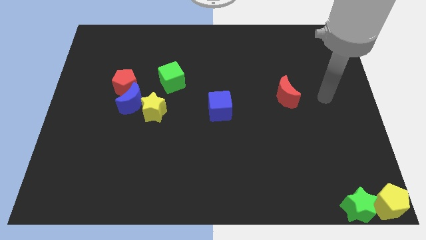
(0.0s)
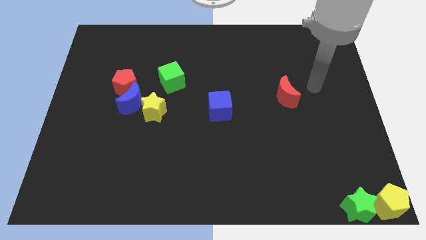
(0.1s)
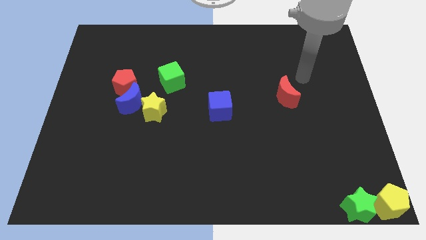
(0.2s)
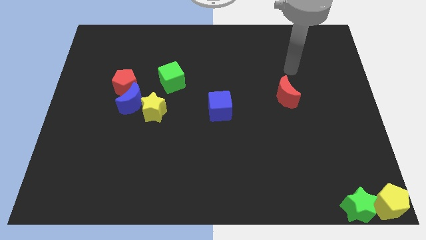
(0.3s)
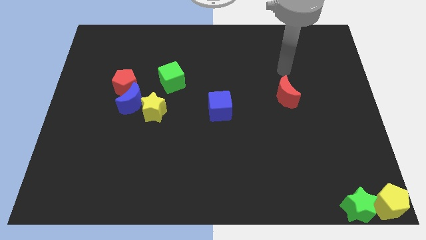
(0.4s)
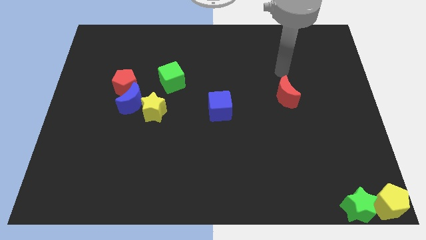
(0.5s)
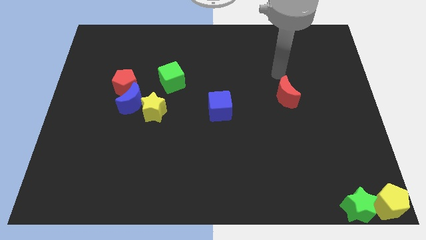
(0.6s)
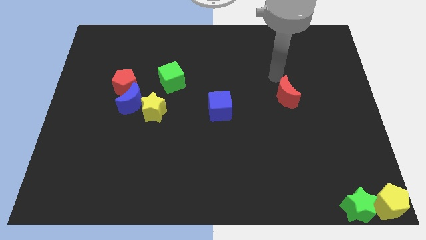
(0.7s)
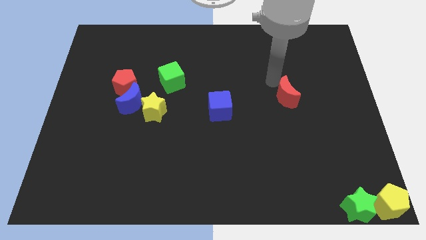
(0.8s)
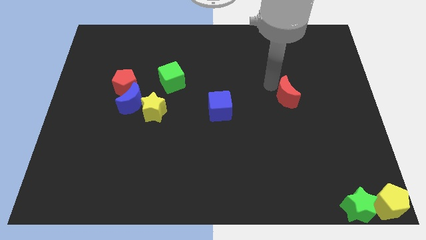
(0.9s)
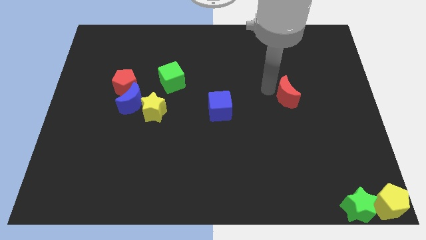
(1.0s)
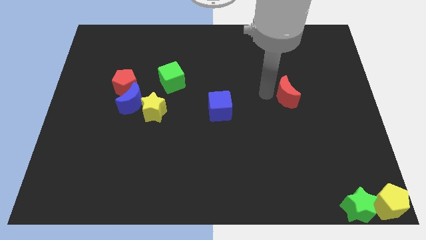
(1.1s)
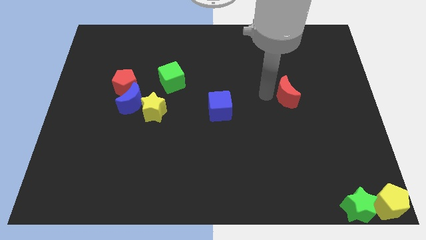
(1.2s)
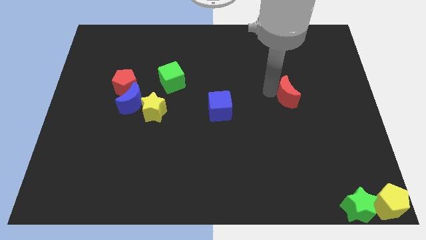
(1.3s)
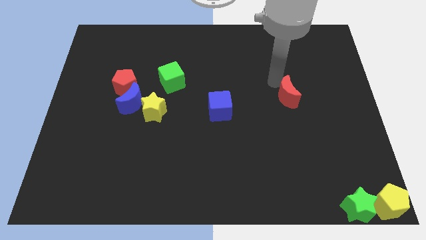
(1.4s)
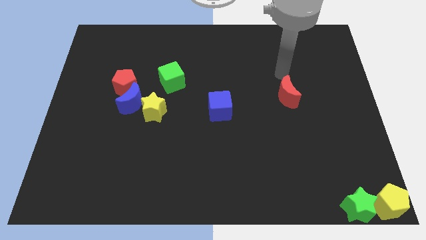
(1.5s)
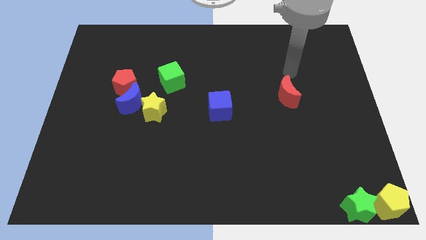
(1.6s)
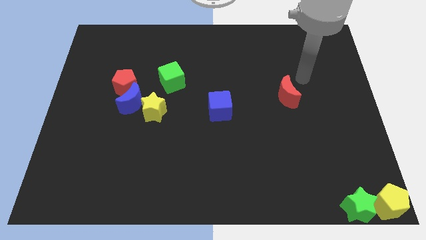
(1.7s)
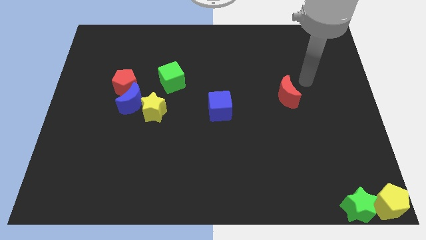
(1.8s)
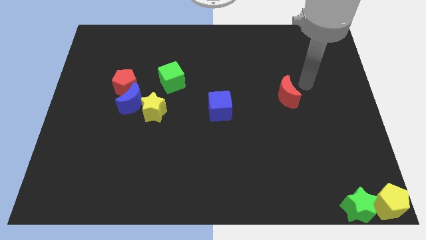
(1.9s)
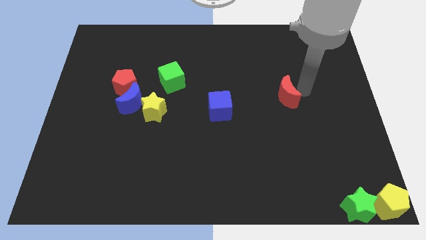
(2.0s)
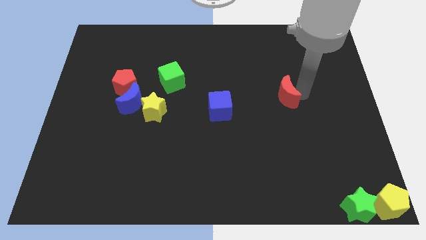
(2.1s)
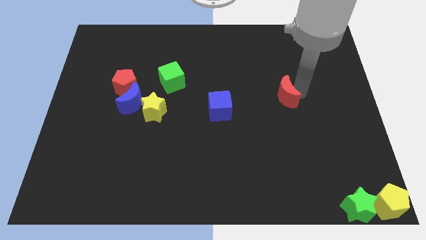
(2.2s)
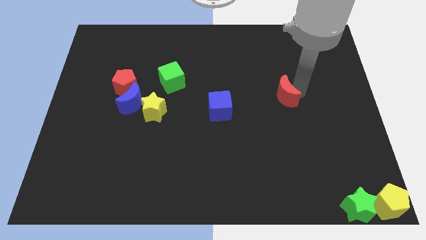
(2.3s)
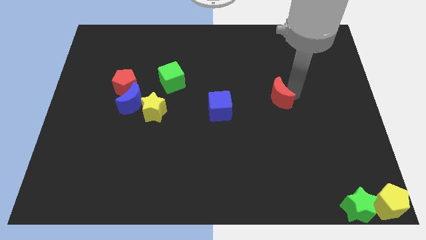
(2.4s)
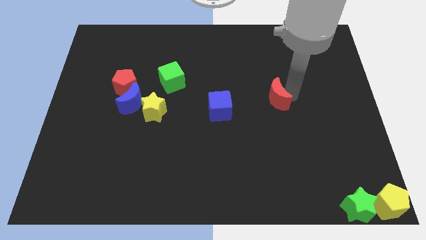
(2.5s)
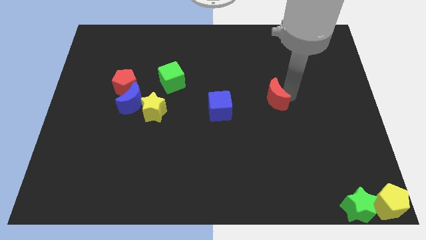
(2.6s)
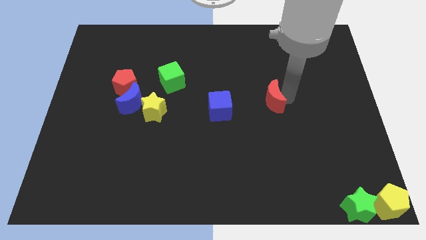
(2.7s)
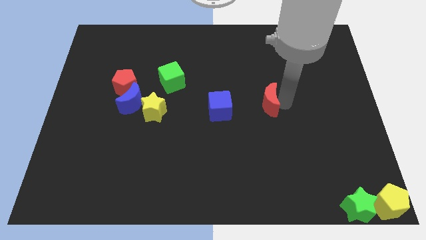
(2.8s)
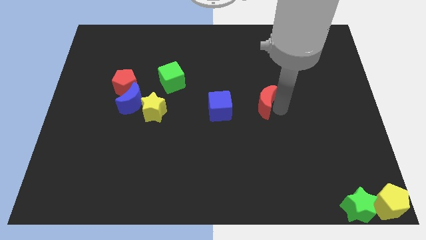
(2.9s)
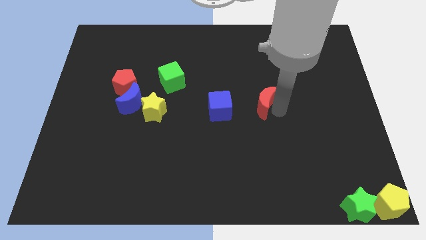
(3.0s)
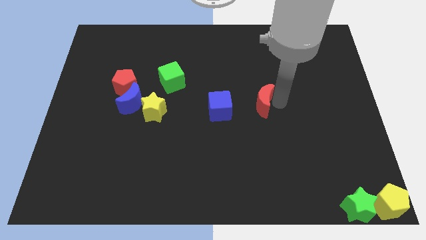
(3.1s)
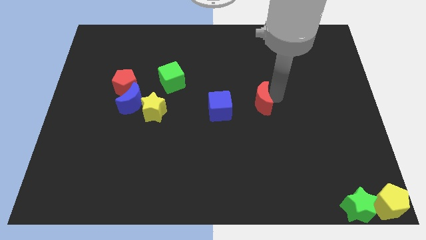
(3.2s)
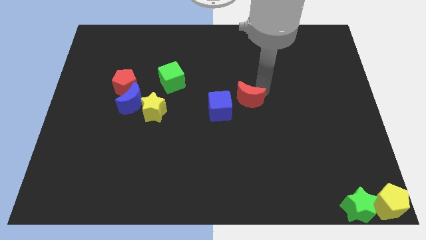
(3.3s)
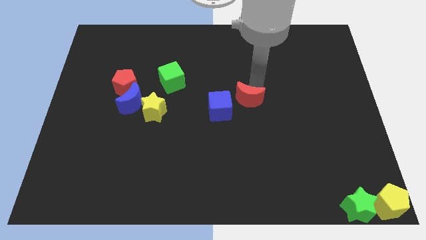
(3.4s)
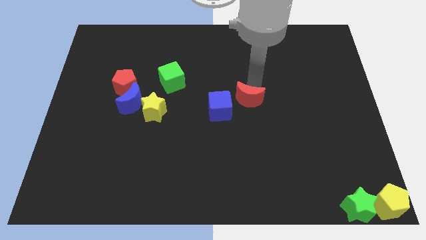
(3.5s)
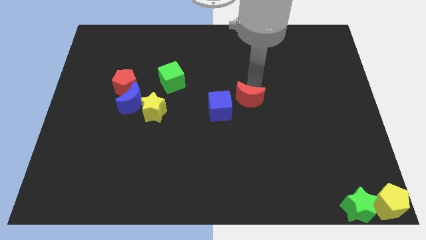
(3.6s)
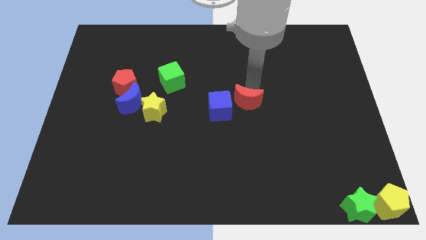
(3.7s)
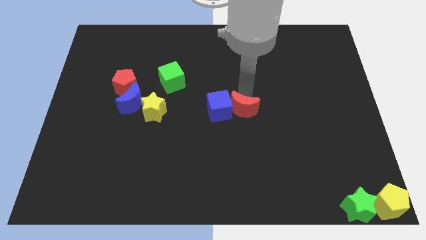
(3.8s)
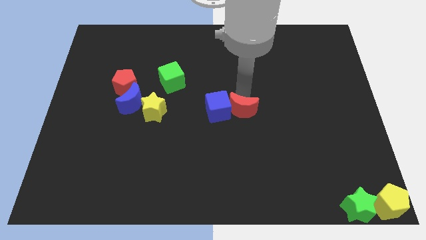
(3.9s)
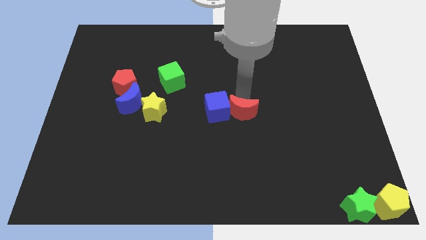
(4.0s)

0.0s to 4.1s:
push the red crescent into the blue cube

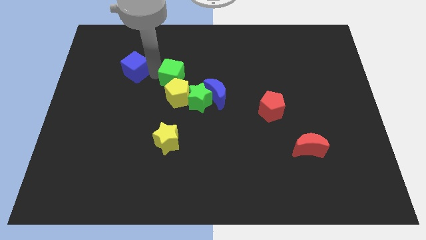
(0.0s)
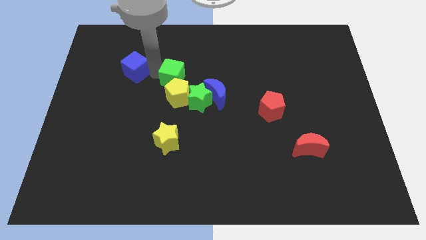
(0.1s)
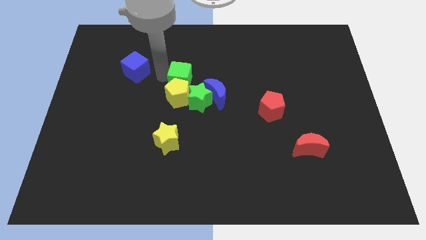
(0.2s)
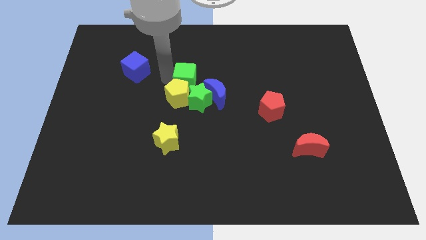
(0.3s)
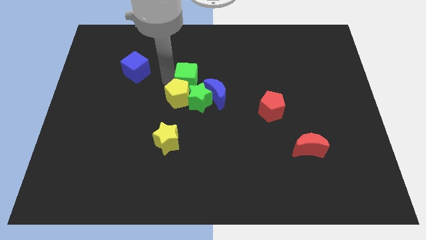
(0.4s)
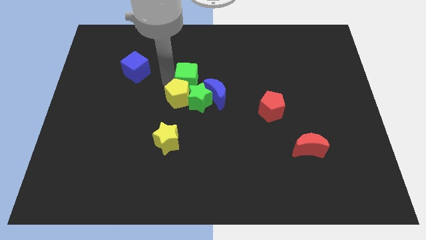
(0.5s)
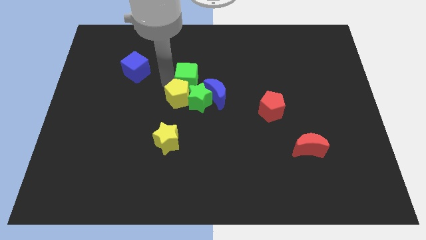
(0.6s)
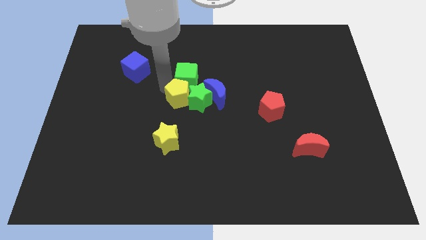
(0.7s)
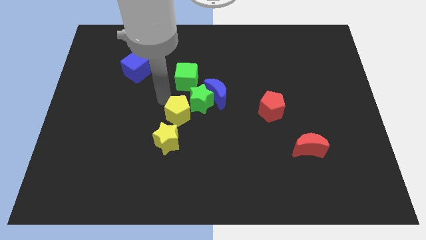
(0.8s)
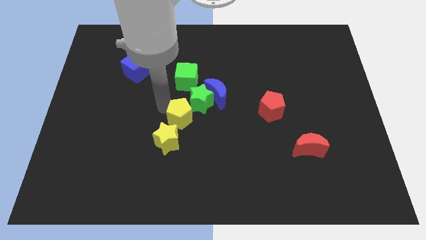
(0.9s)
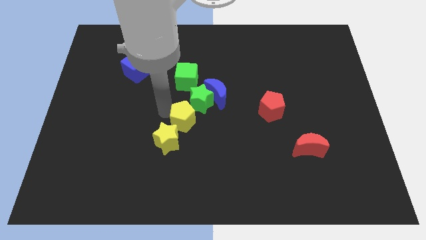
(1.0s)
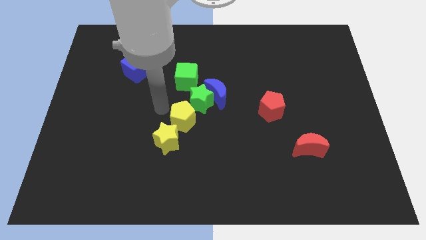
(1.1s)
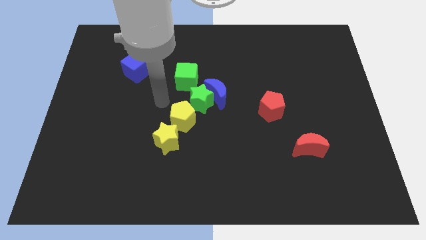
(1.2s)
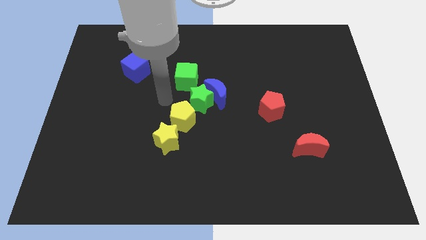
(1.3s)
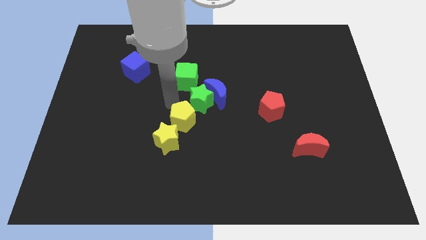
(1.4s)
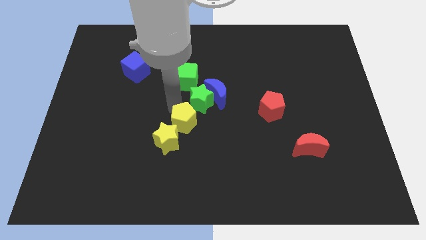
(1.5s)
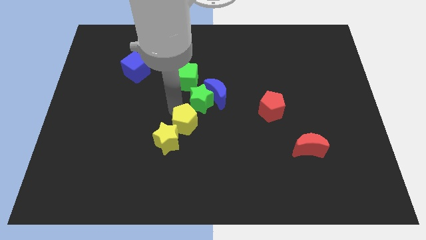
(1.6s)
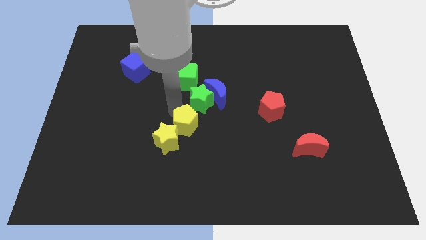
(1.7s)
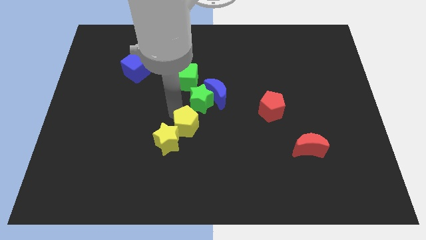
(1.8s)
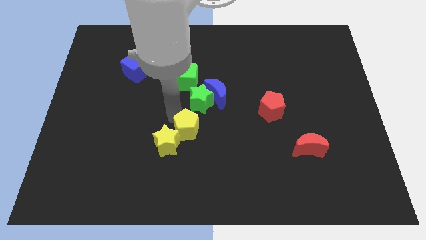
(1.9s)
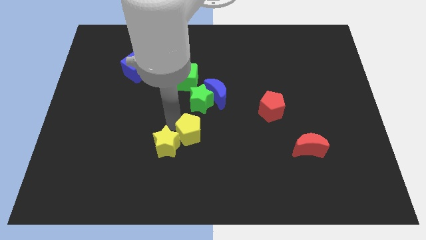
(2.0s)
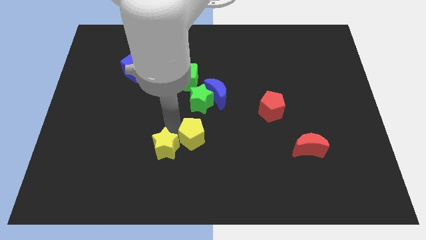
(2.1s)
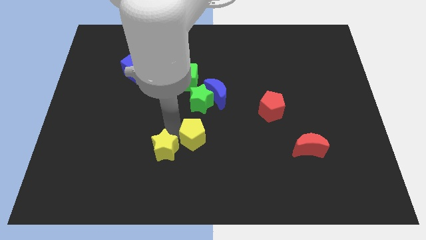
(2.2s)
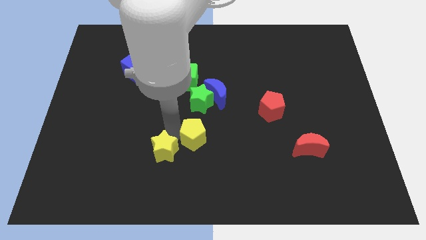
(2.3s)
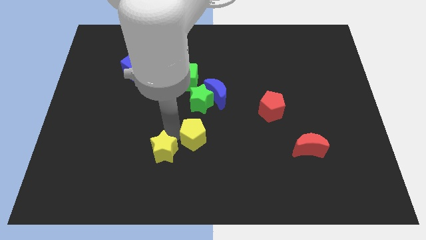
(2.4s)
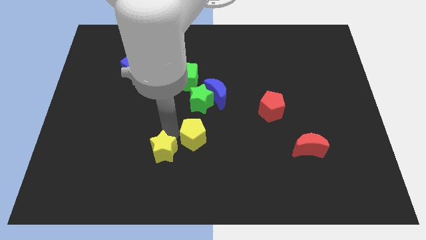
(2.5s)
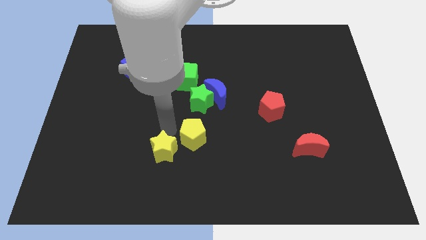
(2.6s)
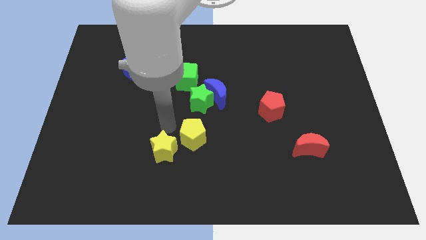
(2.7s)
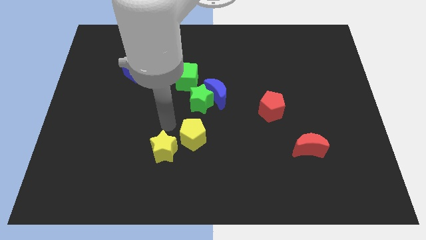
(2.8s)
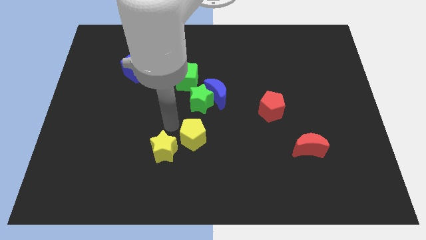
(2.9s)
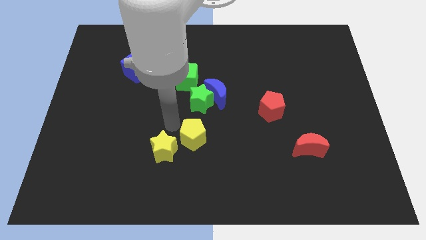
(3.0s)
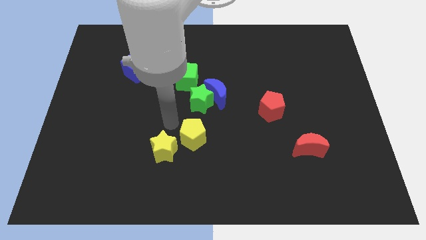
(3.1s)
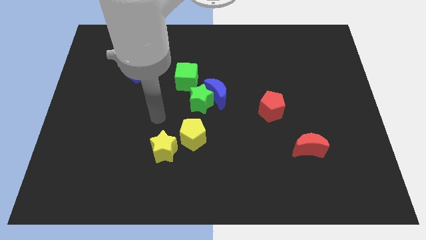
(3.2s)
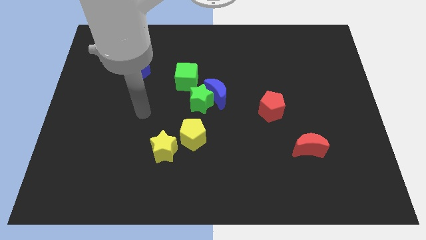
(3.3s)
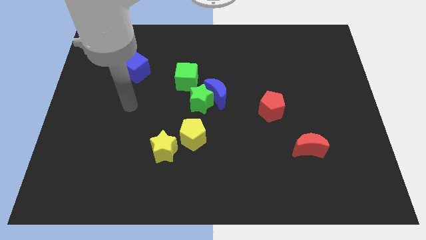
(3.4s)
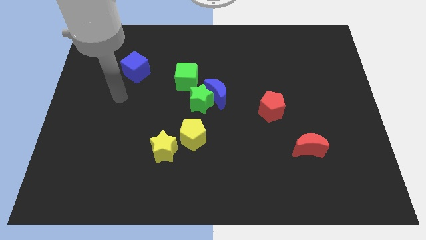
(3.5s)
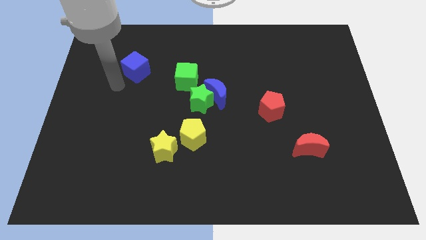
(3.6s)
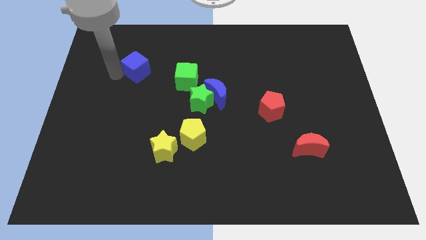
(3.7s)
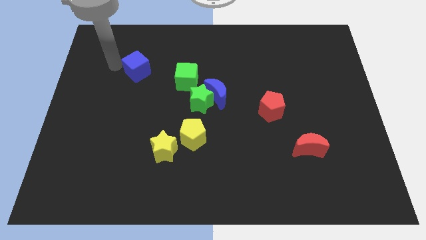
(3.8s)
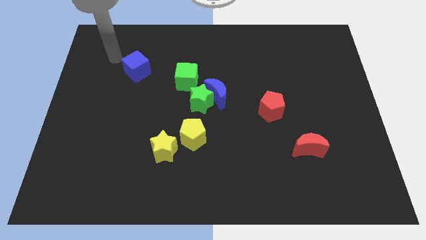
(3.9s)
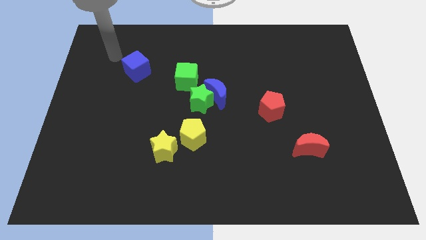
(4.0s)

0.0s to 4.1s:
place yellow pentagon to the bottom of green star

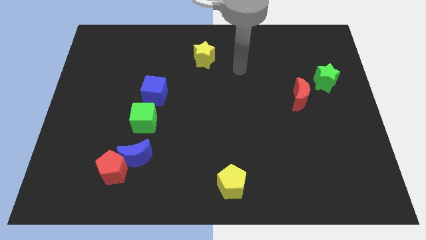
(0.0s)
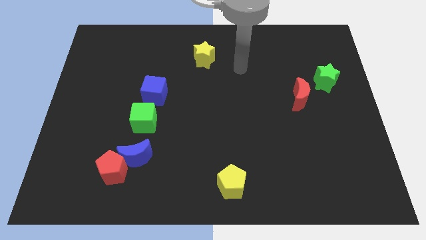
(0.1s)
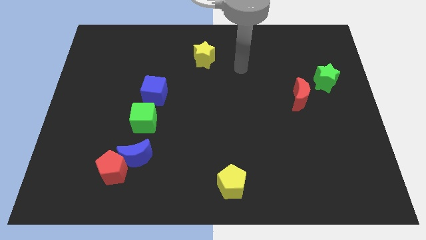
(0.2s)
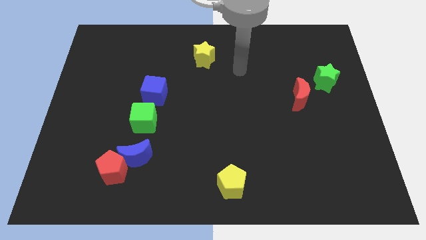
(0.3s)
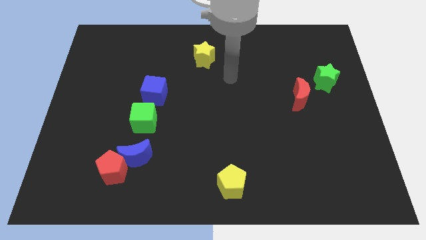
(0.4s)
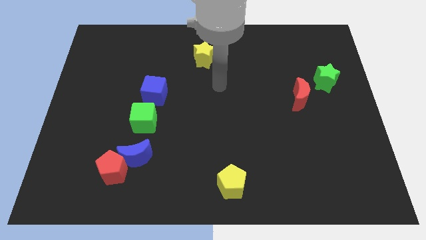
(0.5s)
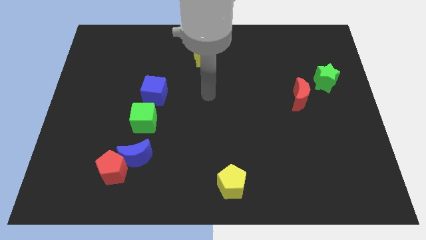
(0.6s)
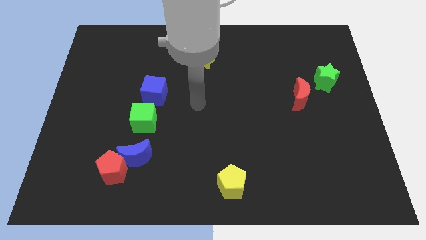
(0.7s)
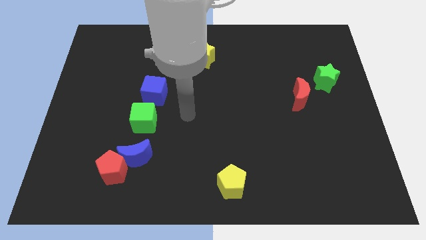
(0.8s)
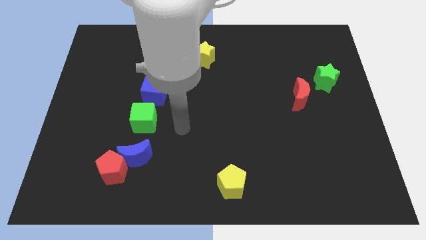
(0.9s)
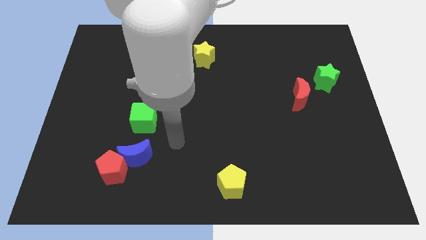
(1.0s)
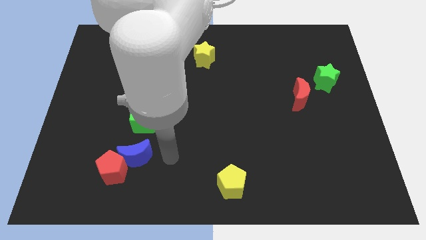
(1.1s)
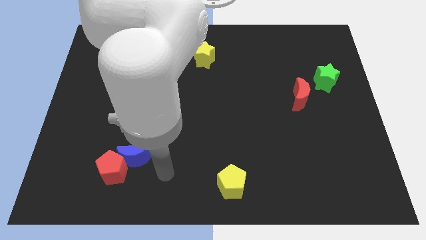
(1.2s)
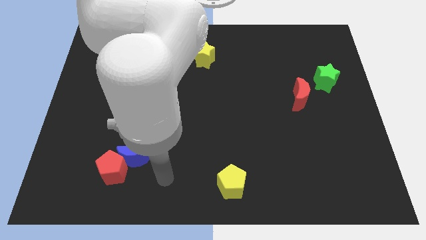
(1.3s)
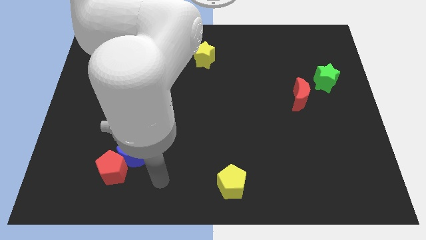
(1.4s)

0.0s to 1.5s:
point the arm to the right of the red pentagon
